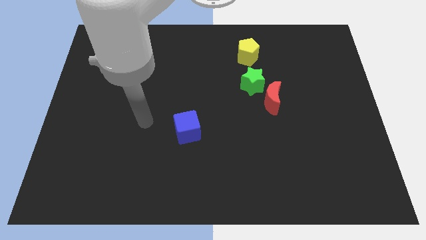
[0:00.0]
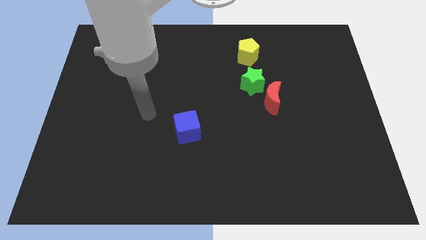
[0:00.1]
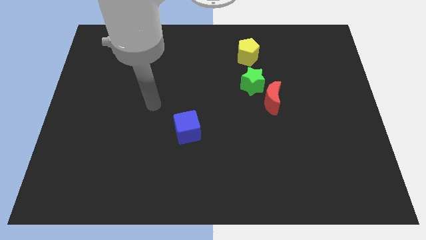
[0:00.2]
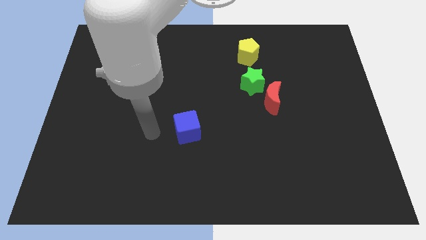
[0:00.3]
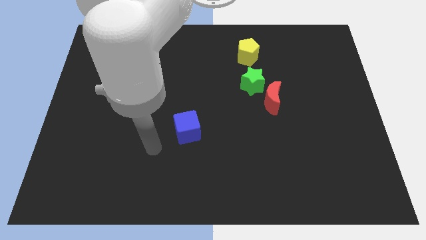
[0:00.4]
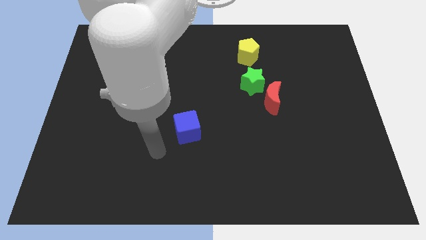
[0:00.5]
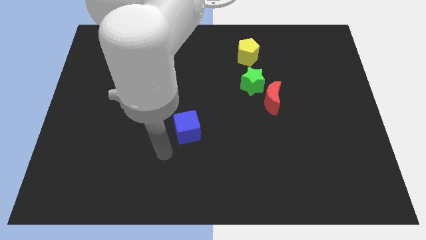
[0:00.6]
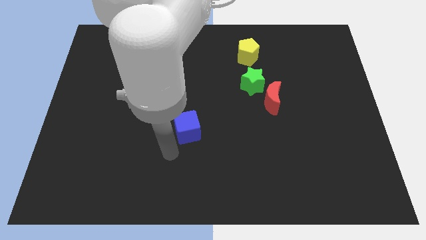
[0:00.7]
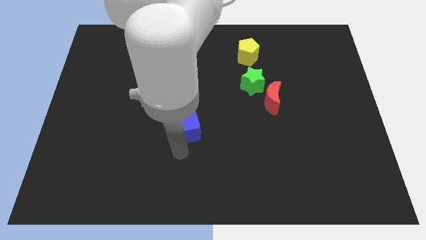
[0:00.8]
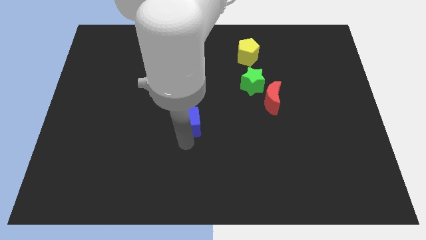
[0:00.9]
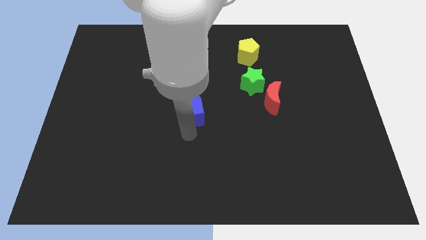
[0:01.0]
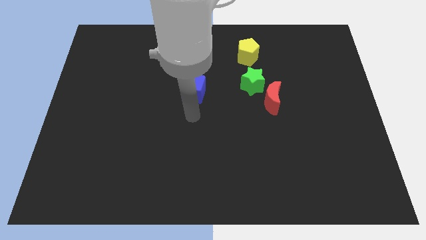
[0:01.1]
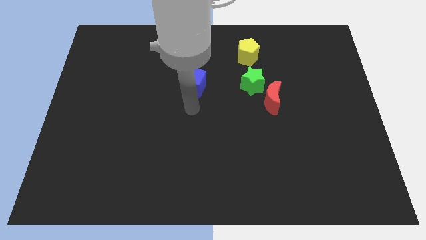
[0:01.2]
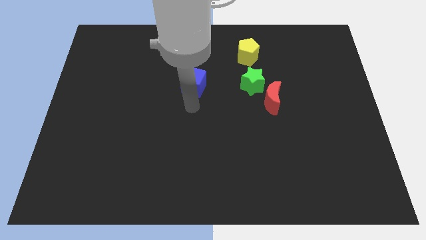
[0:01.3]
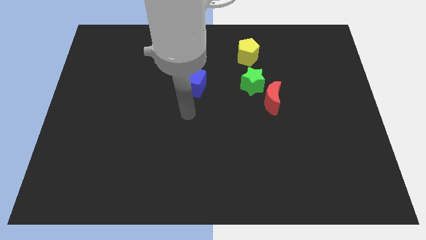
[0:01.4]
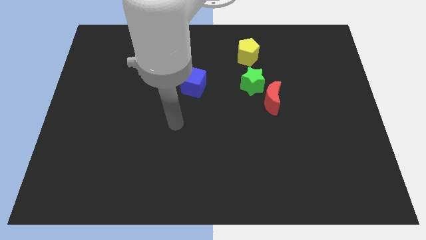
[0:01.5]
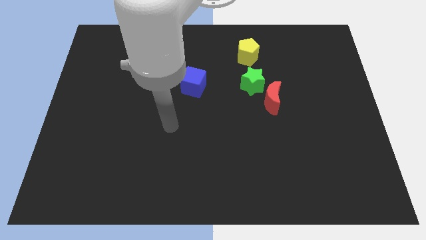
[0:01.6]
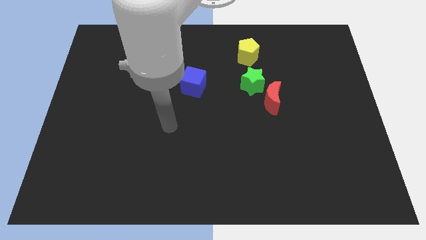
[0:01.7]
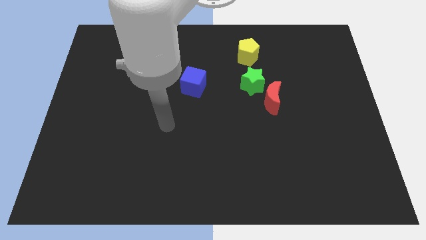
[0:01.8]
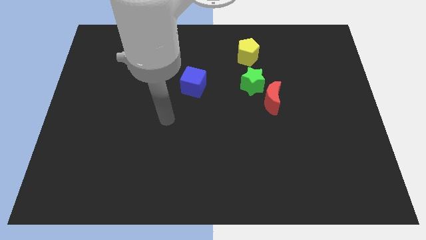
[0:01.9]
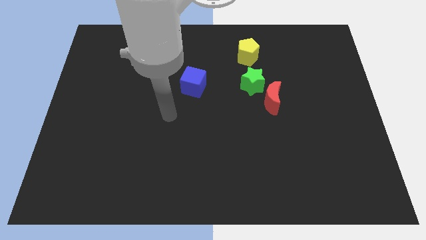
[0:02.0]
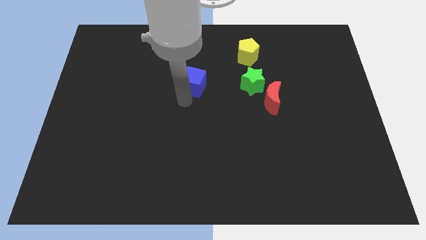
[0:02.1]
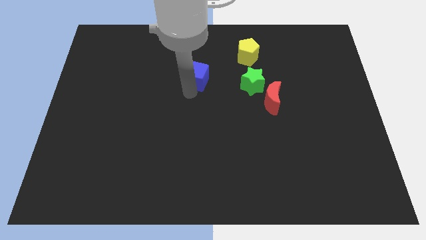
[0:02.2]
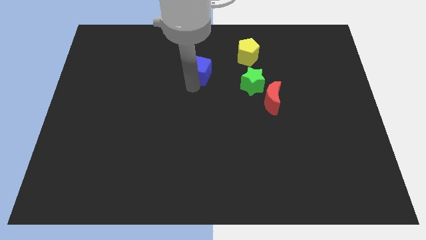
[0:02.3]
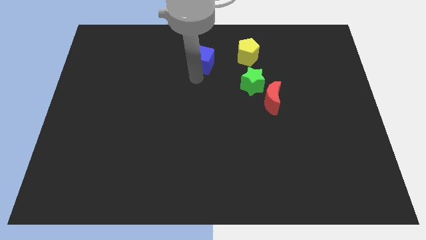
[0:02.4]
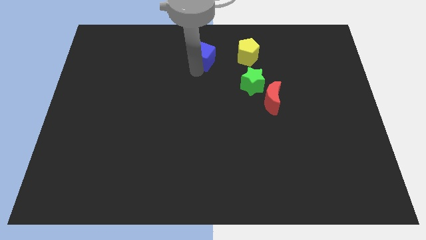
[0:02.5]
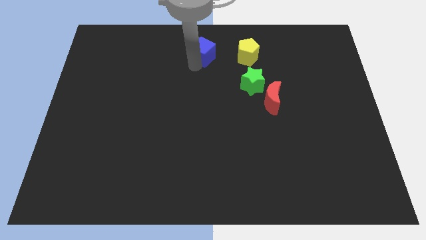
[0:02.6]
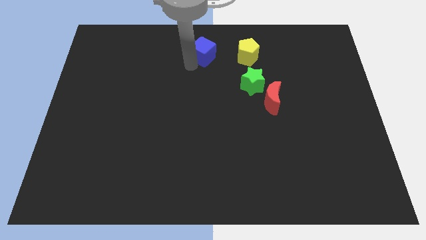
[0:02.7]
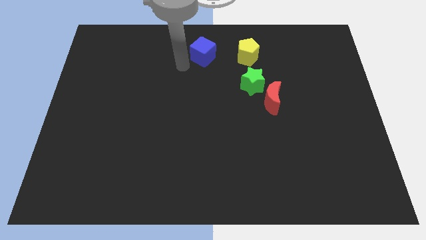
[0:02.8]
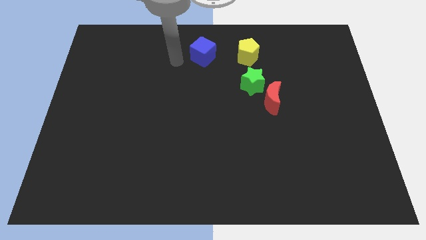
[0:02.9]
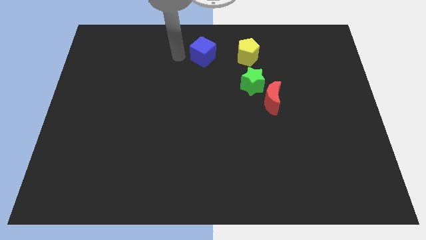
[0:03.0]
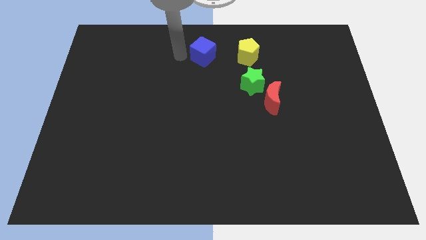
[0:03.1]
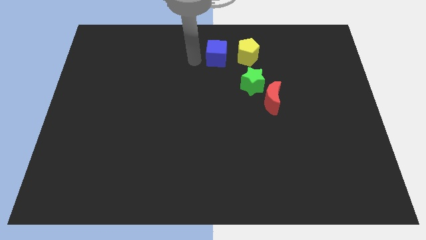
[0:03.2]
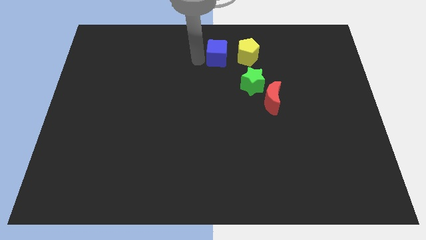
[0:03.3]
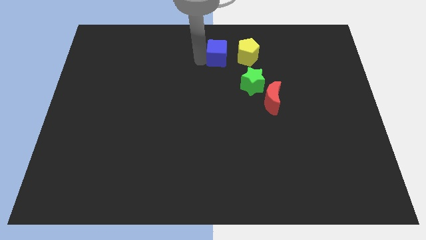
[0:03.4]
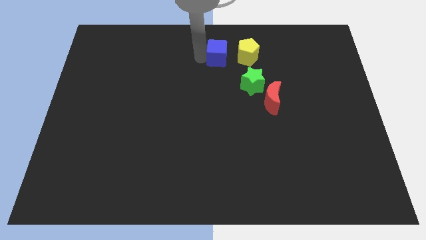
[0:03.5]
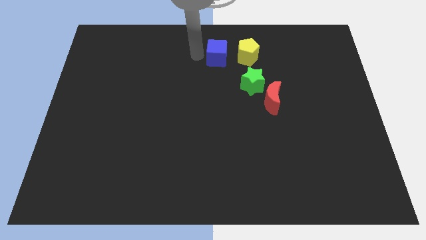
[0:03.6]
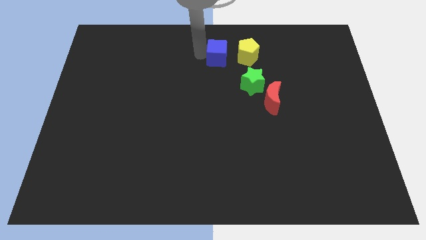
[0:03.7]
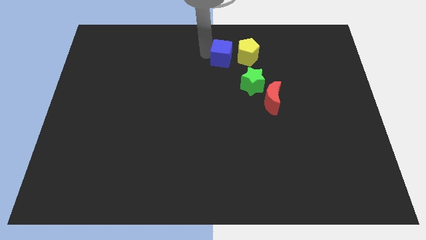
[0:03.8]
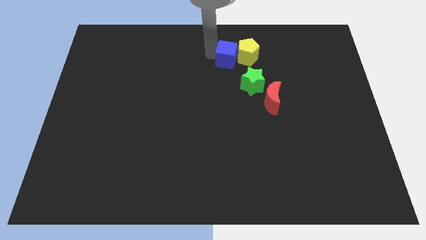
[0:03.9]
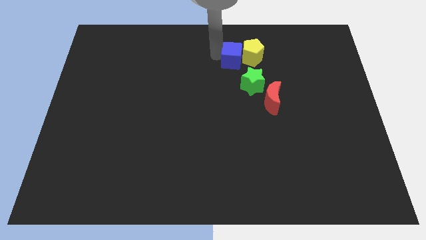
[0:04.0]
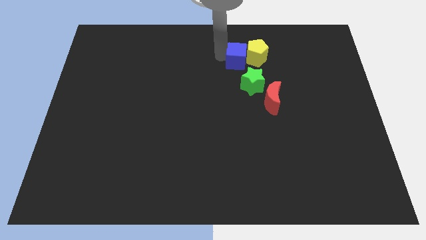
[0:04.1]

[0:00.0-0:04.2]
move the blue cube towards the yellow block

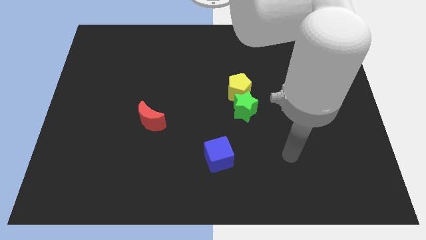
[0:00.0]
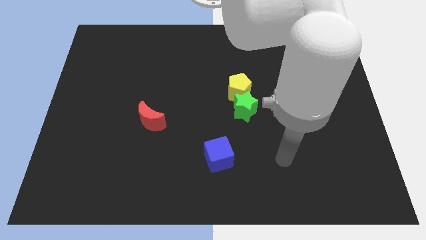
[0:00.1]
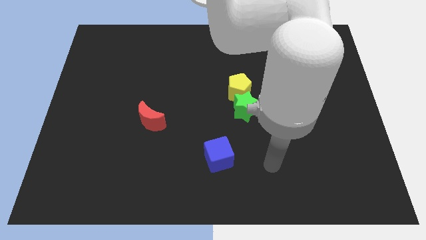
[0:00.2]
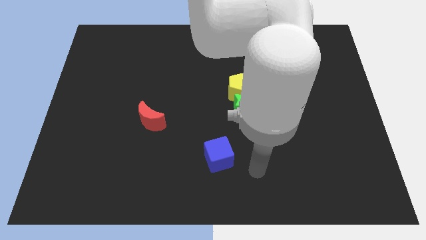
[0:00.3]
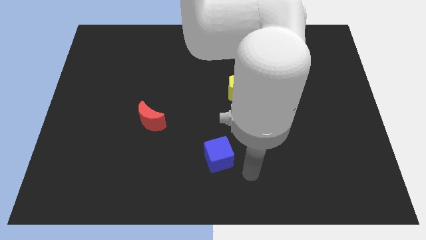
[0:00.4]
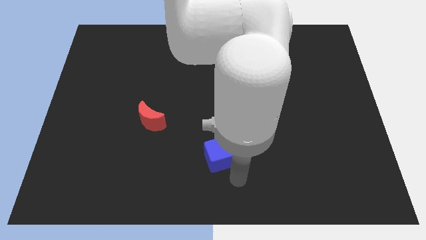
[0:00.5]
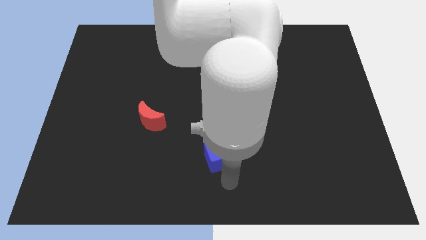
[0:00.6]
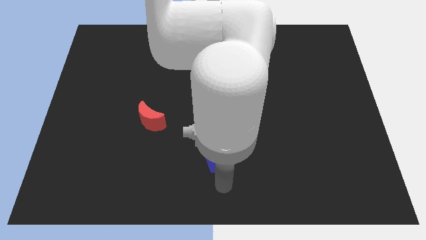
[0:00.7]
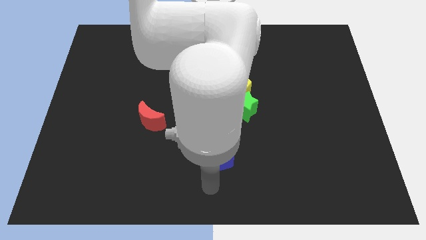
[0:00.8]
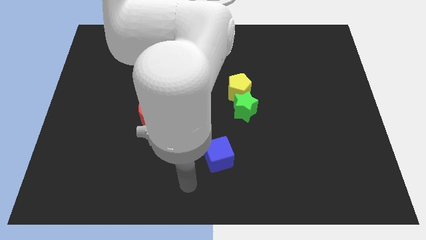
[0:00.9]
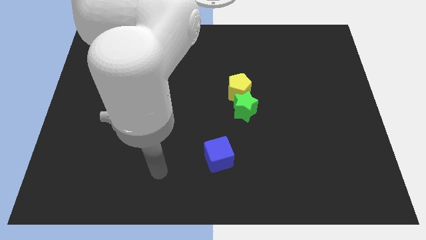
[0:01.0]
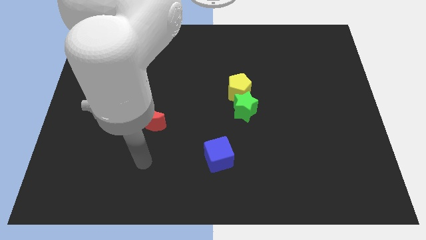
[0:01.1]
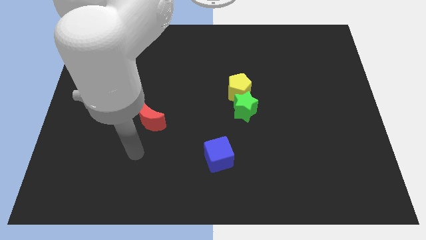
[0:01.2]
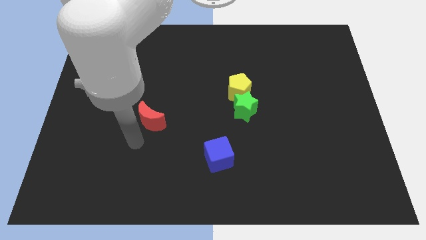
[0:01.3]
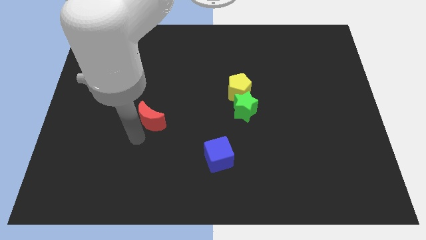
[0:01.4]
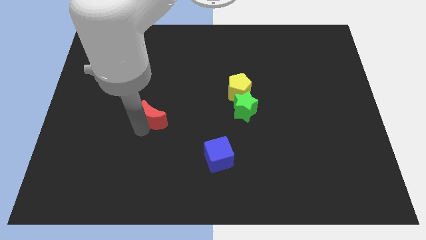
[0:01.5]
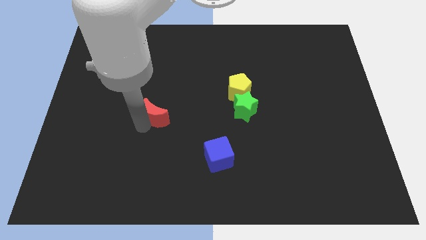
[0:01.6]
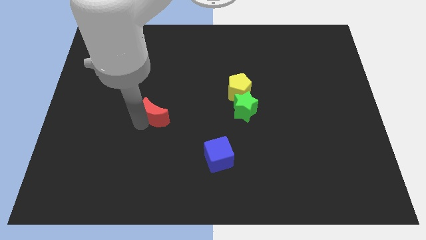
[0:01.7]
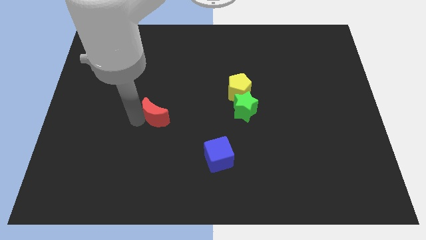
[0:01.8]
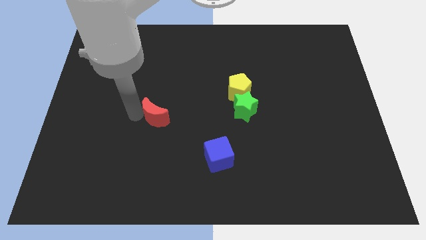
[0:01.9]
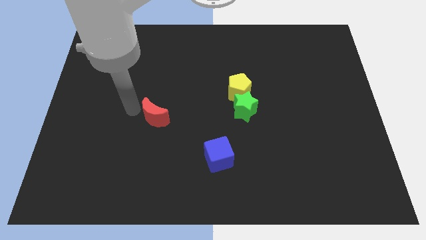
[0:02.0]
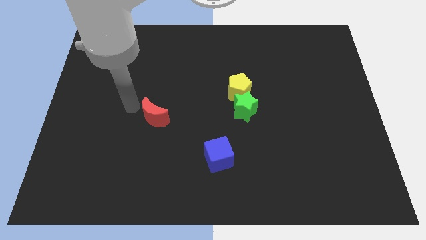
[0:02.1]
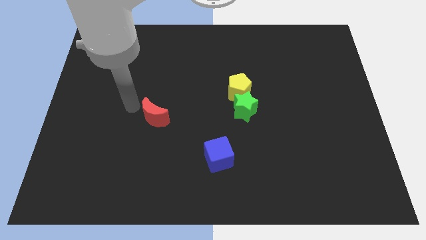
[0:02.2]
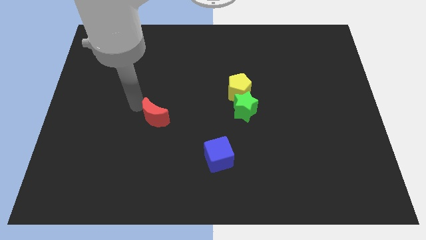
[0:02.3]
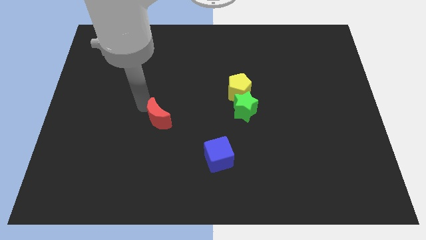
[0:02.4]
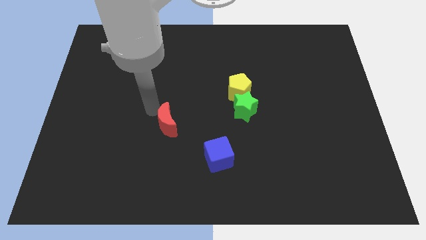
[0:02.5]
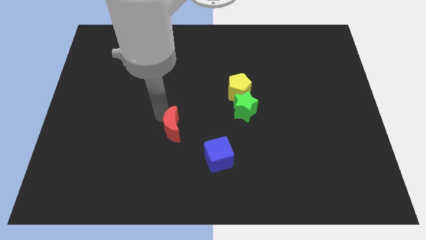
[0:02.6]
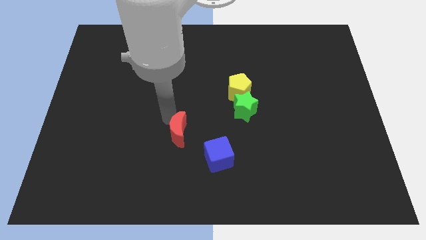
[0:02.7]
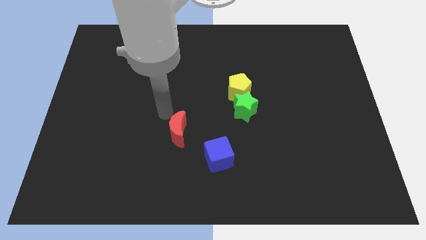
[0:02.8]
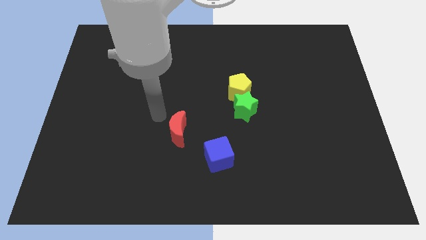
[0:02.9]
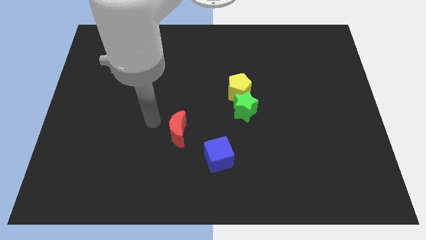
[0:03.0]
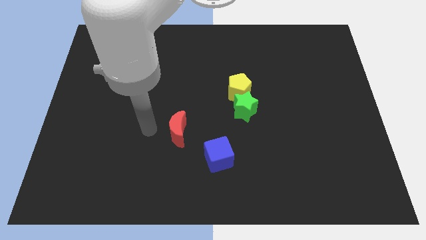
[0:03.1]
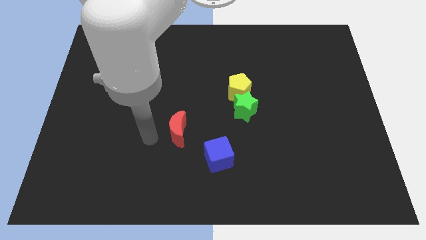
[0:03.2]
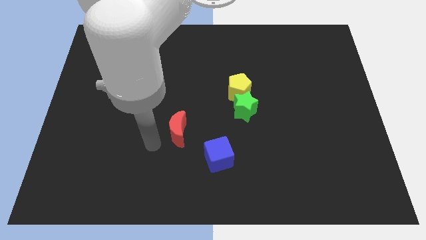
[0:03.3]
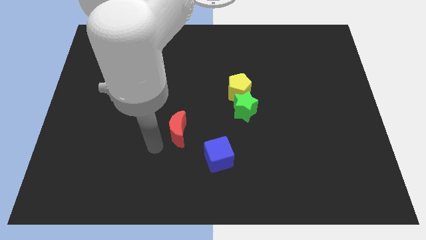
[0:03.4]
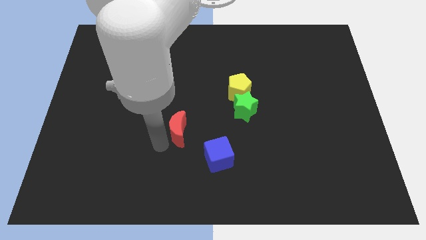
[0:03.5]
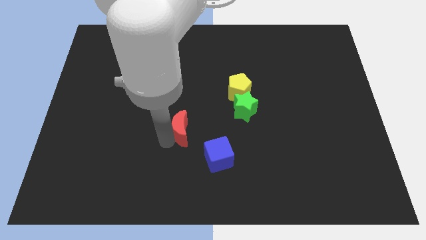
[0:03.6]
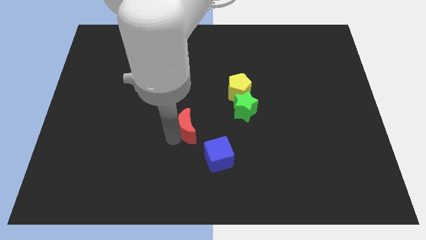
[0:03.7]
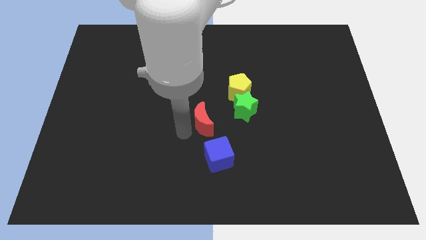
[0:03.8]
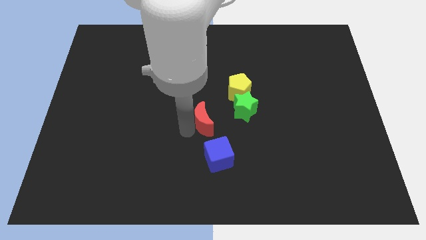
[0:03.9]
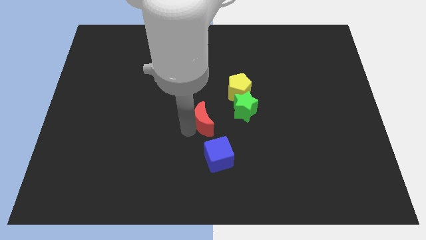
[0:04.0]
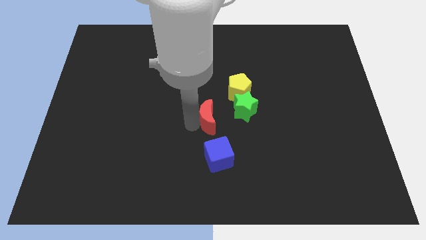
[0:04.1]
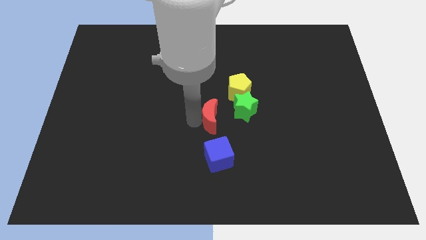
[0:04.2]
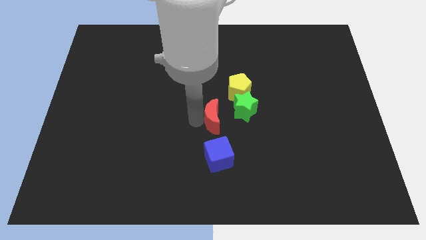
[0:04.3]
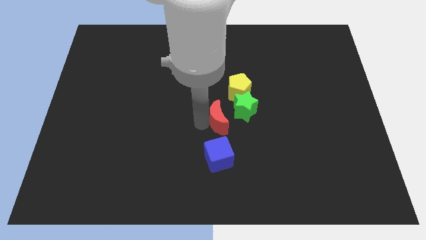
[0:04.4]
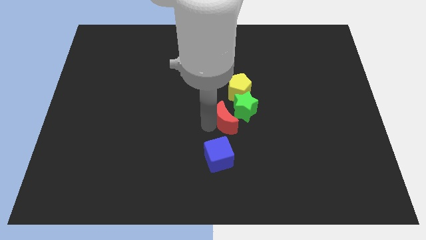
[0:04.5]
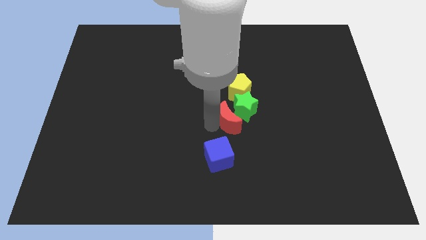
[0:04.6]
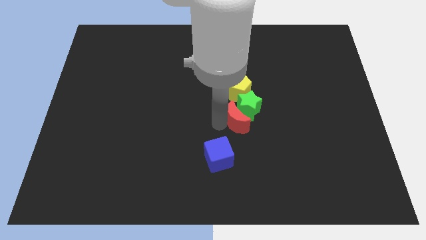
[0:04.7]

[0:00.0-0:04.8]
move the moon to the green star
